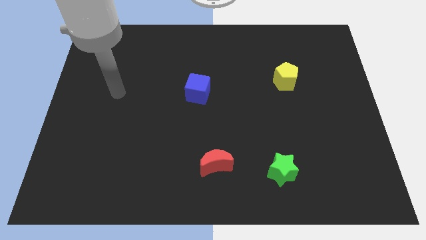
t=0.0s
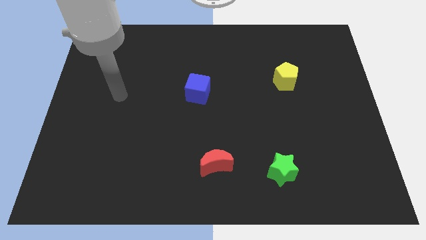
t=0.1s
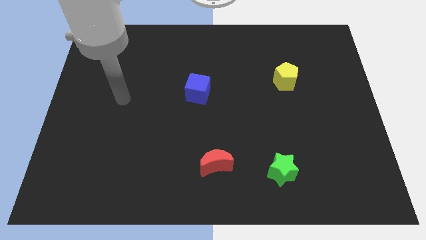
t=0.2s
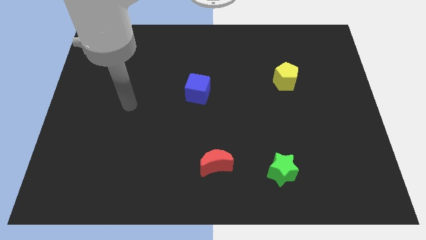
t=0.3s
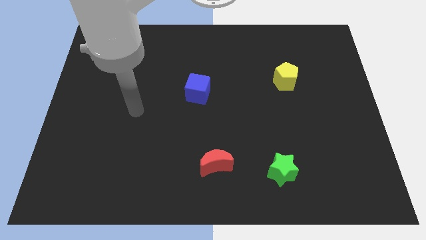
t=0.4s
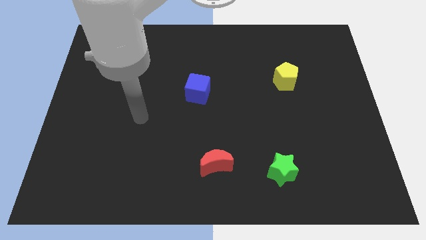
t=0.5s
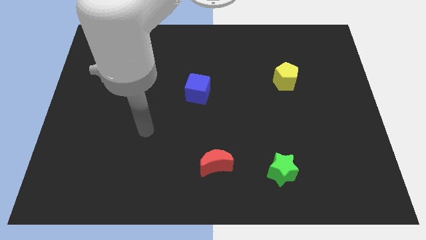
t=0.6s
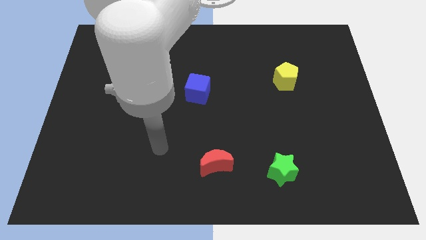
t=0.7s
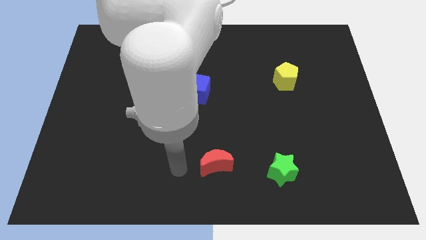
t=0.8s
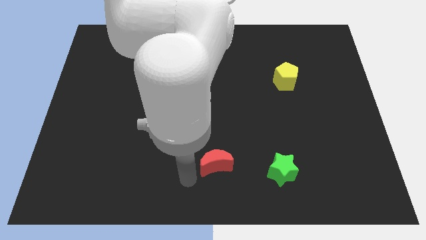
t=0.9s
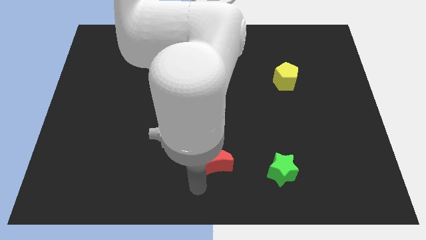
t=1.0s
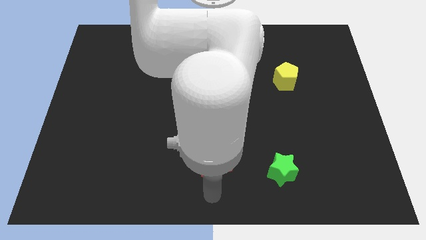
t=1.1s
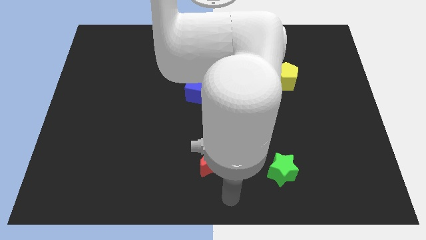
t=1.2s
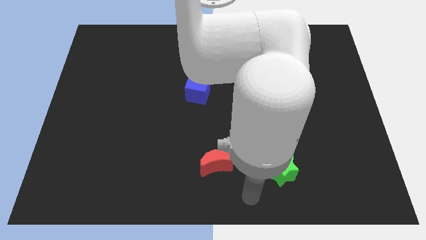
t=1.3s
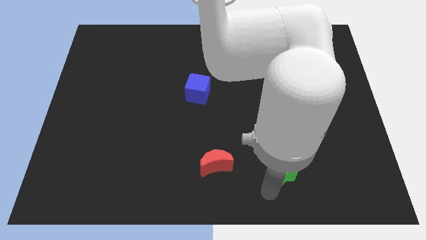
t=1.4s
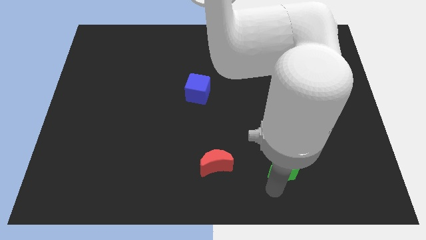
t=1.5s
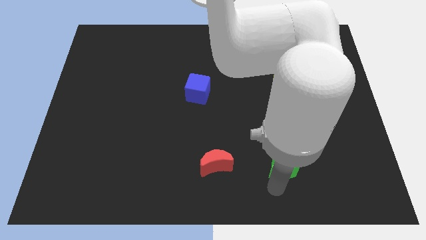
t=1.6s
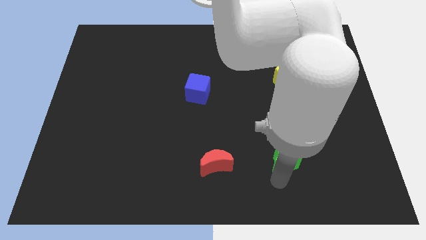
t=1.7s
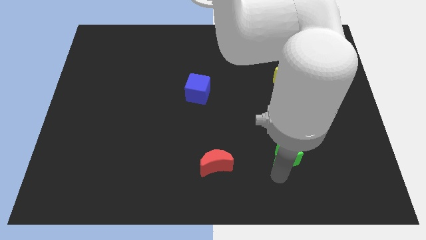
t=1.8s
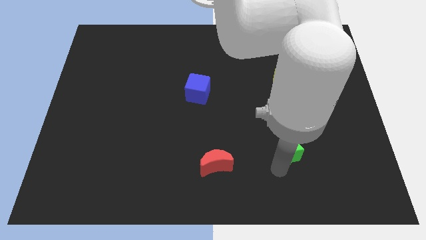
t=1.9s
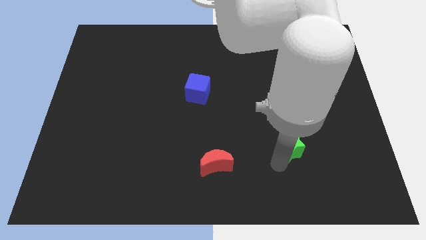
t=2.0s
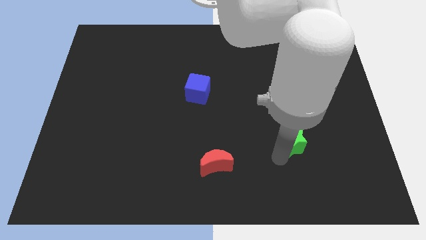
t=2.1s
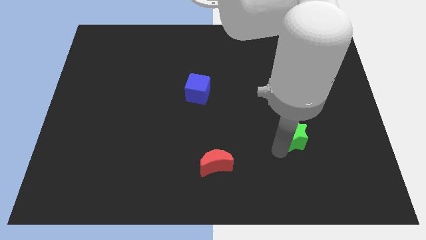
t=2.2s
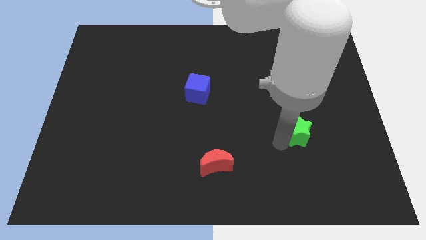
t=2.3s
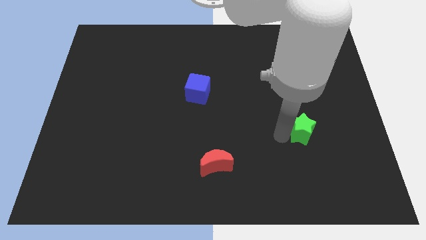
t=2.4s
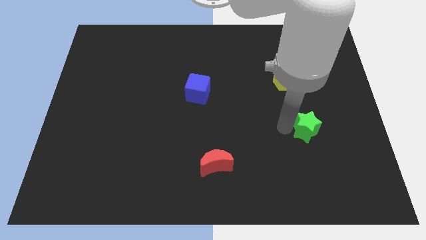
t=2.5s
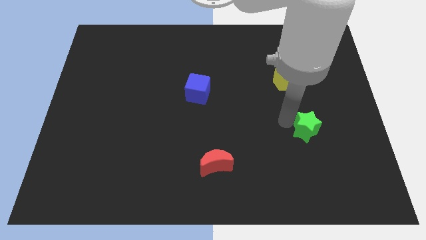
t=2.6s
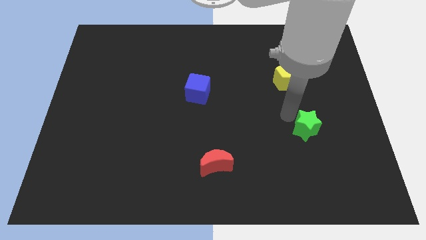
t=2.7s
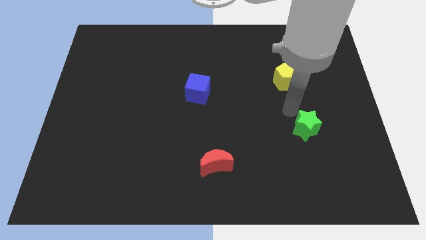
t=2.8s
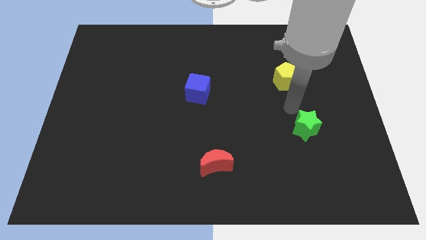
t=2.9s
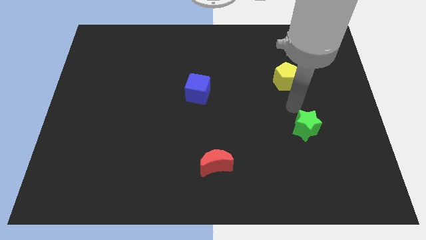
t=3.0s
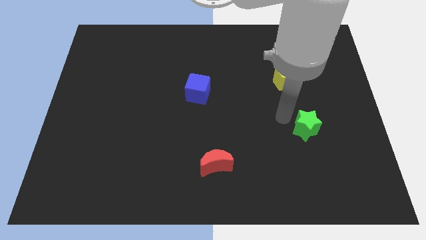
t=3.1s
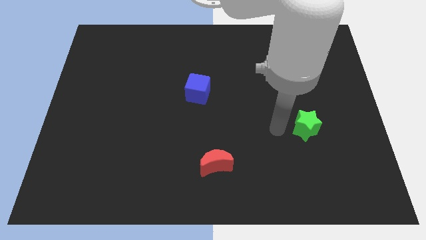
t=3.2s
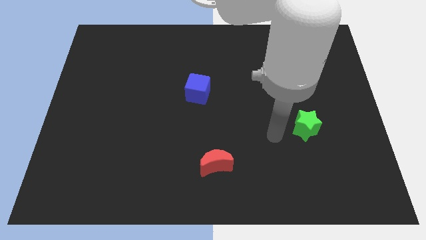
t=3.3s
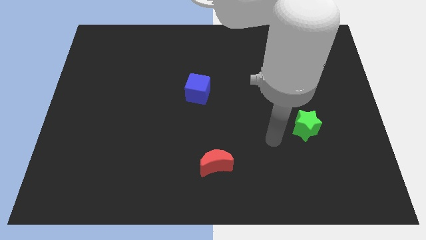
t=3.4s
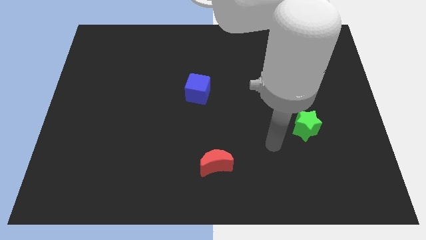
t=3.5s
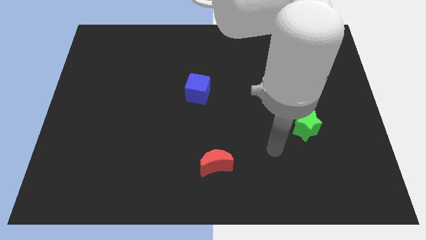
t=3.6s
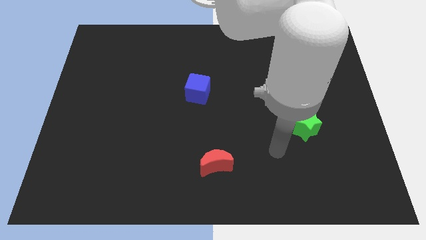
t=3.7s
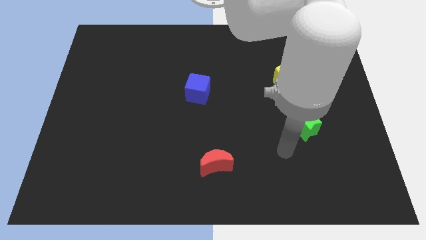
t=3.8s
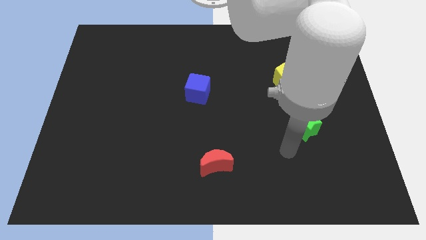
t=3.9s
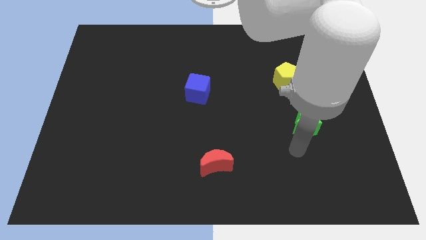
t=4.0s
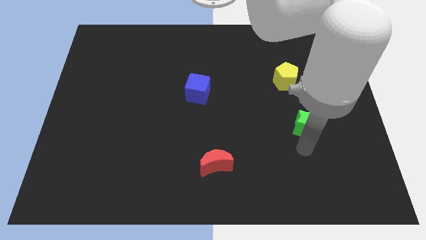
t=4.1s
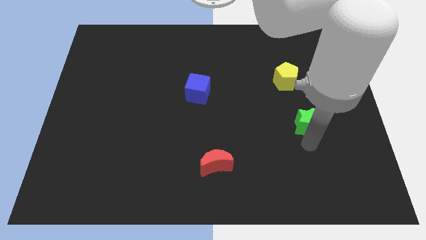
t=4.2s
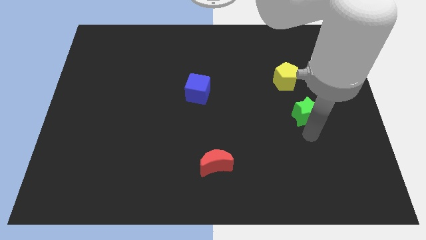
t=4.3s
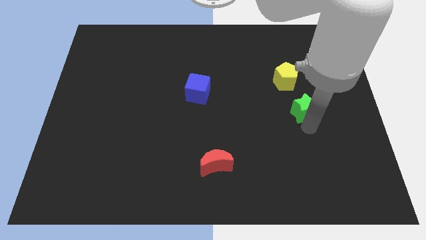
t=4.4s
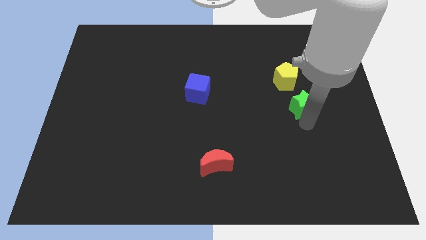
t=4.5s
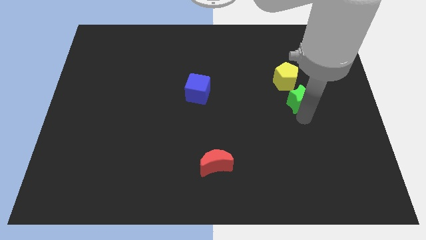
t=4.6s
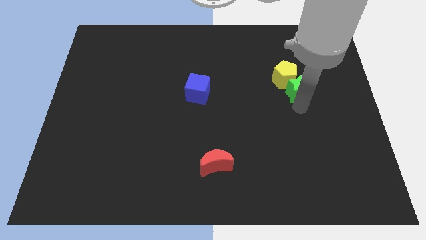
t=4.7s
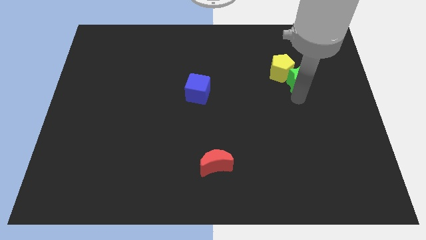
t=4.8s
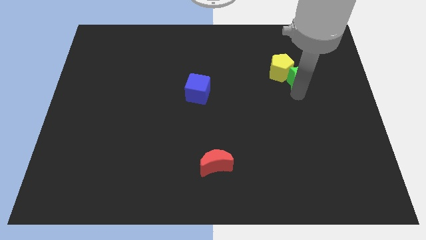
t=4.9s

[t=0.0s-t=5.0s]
move the green block to the yellow pentagon

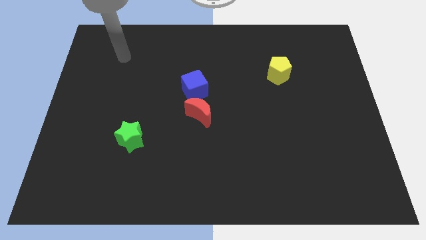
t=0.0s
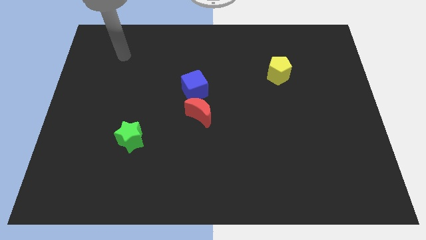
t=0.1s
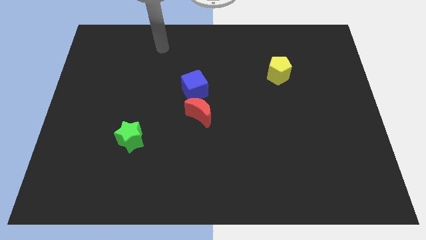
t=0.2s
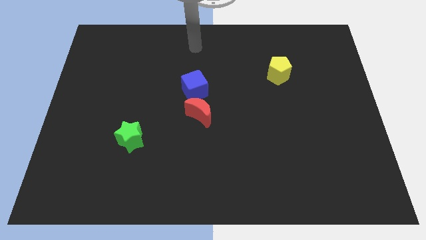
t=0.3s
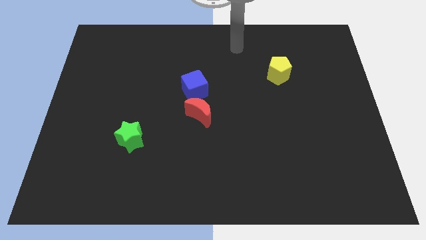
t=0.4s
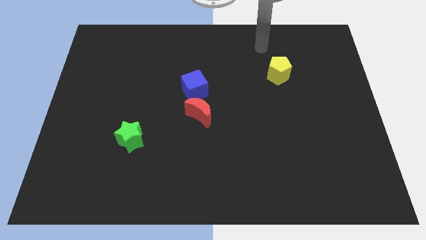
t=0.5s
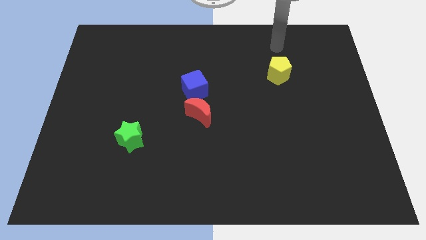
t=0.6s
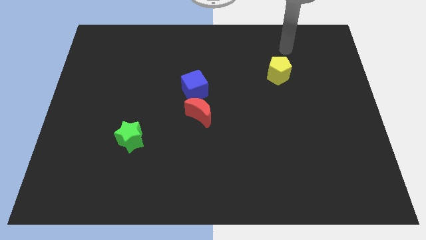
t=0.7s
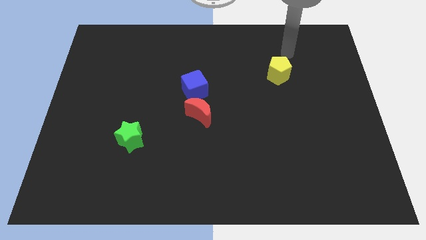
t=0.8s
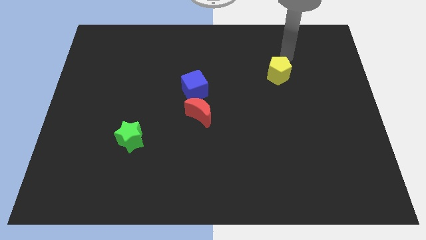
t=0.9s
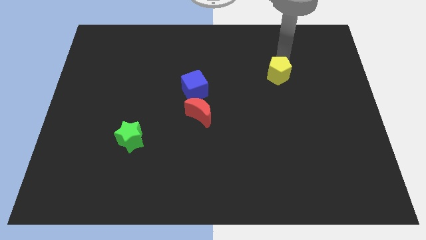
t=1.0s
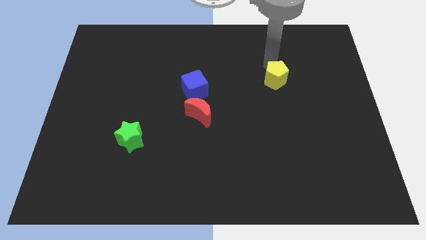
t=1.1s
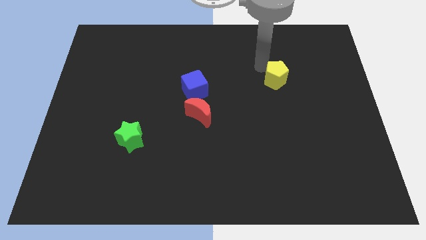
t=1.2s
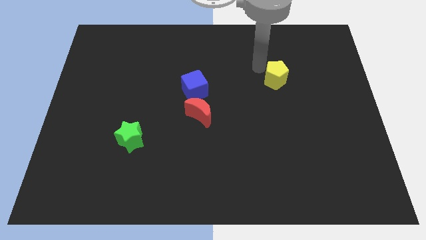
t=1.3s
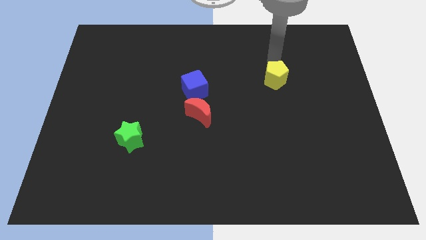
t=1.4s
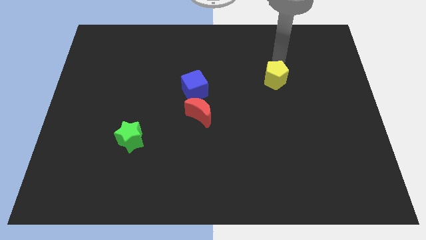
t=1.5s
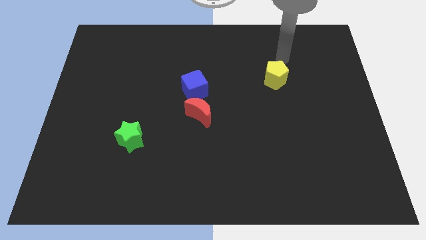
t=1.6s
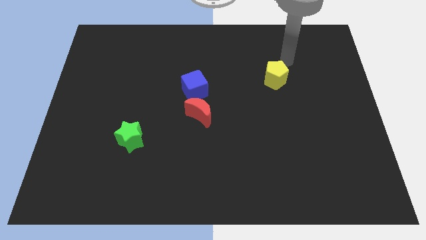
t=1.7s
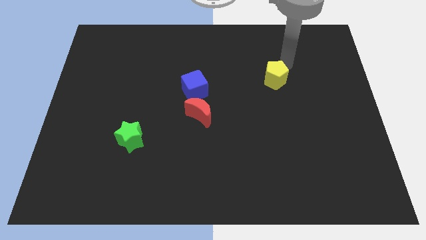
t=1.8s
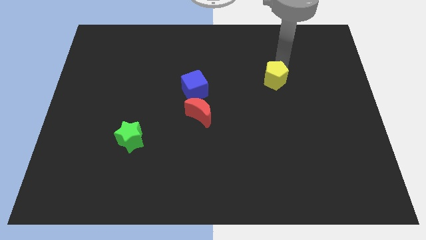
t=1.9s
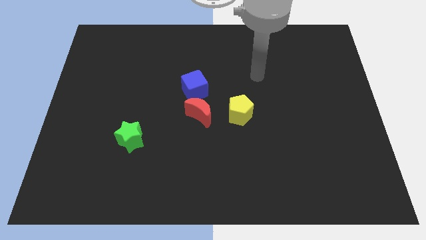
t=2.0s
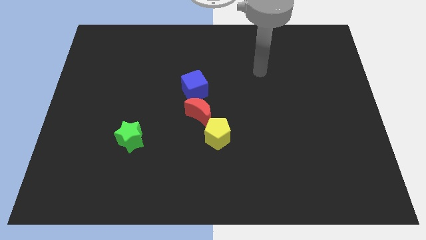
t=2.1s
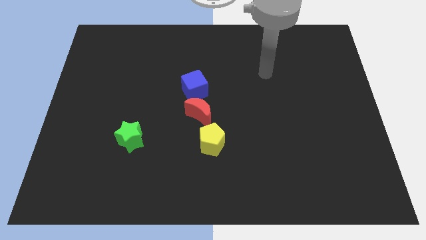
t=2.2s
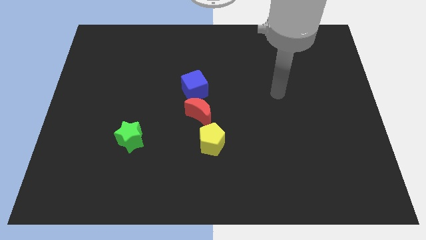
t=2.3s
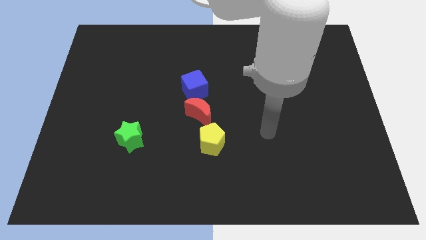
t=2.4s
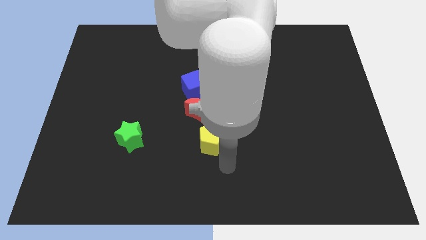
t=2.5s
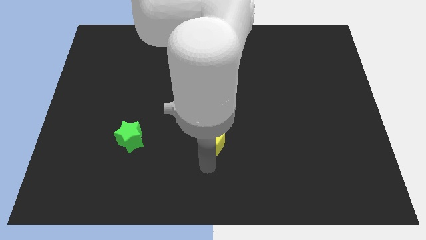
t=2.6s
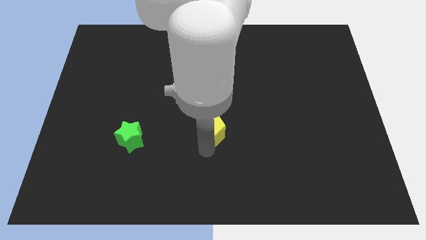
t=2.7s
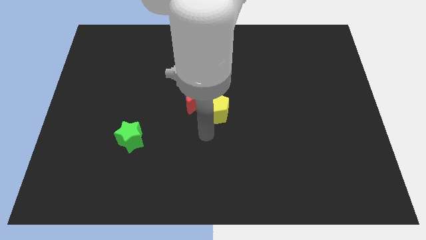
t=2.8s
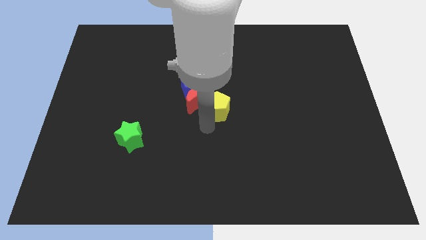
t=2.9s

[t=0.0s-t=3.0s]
push the pentagon towards the red moon

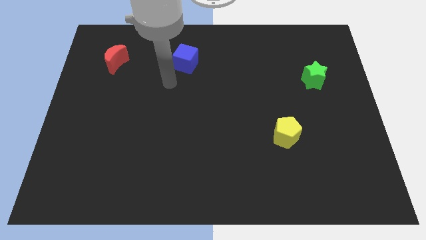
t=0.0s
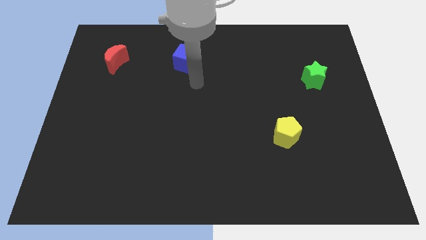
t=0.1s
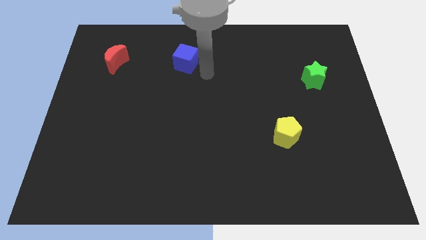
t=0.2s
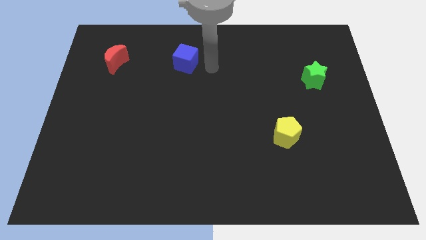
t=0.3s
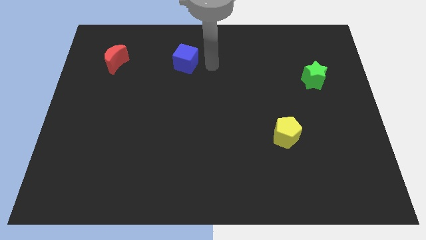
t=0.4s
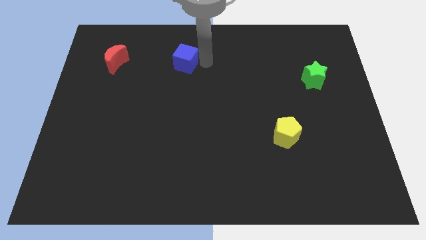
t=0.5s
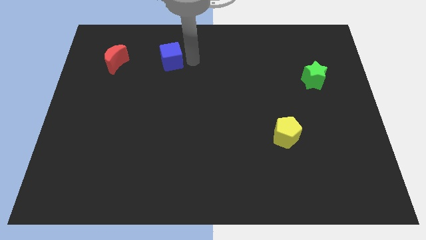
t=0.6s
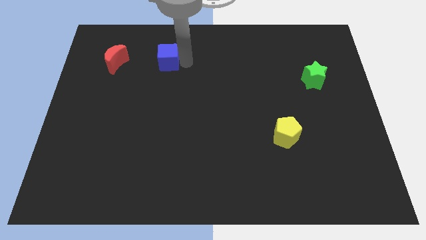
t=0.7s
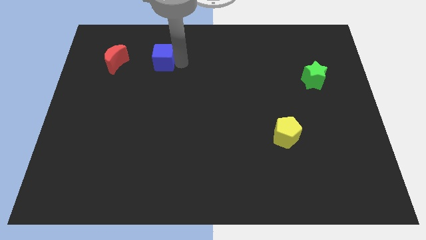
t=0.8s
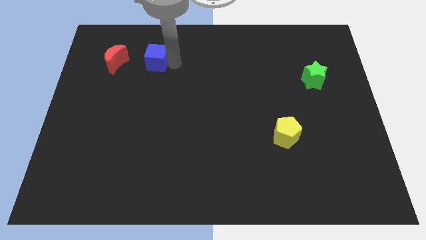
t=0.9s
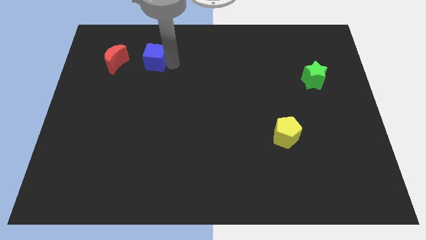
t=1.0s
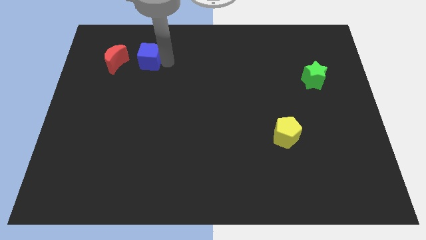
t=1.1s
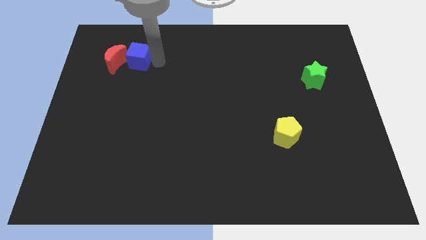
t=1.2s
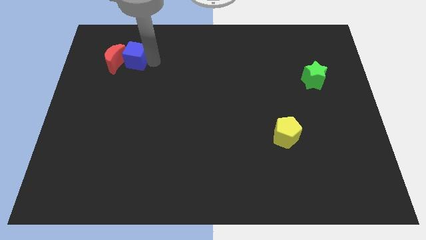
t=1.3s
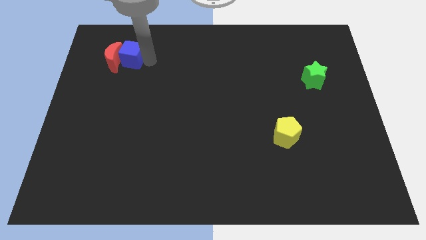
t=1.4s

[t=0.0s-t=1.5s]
move the blue cube to the red moon
